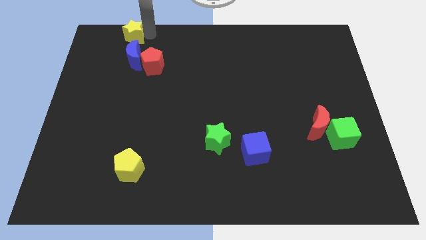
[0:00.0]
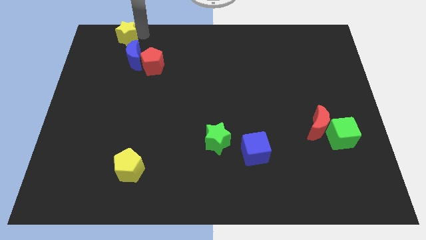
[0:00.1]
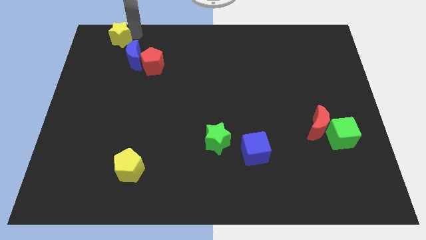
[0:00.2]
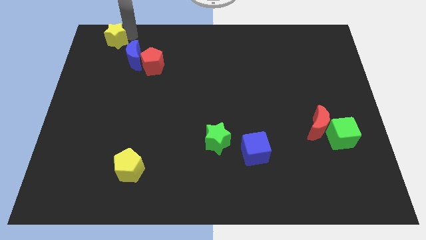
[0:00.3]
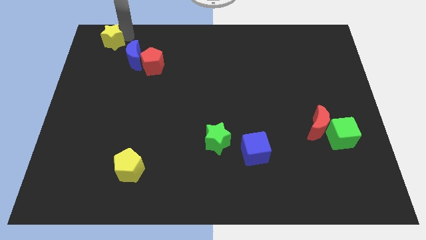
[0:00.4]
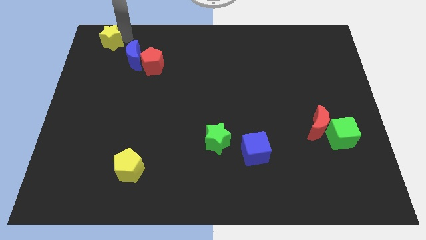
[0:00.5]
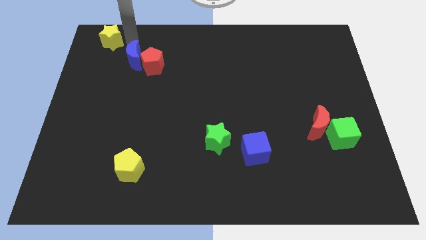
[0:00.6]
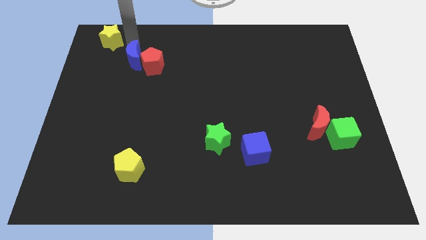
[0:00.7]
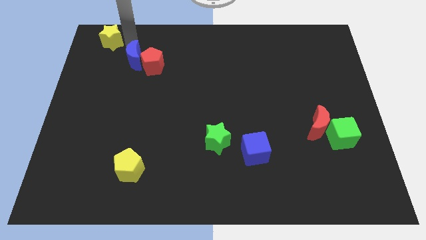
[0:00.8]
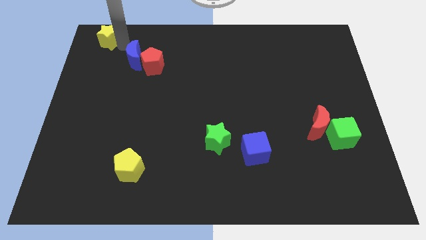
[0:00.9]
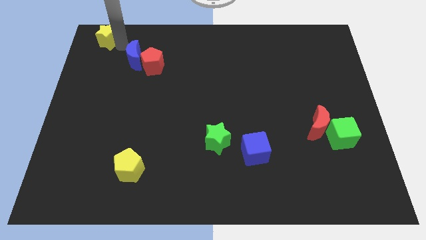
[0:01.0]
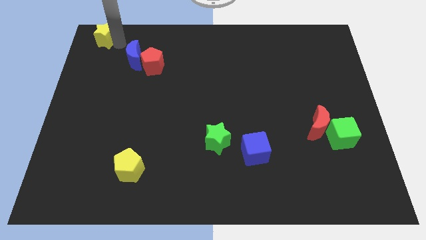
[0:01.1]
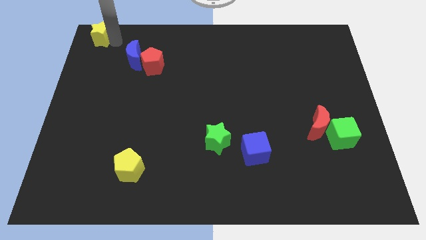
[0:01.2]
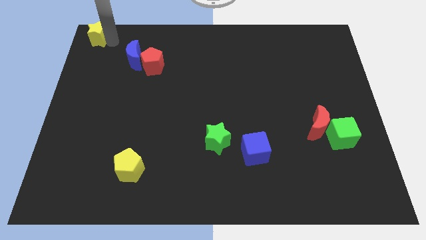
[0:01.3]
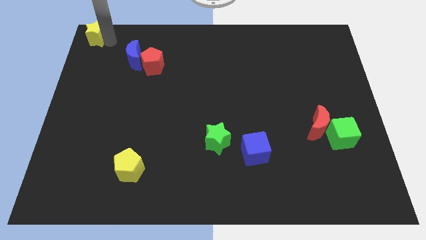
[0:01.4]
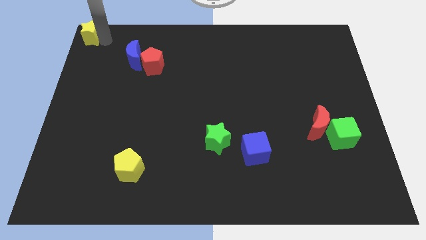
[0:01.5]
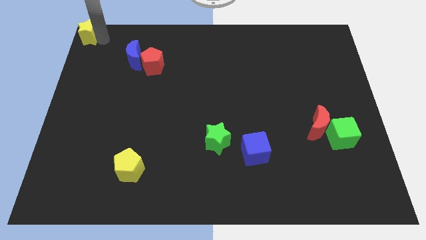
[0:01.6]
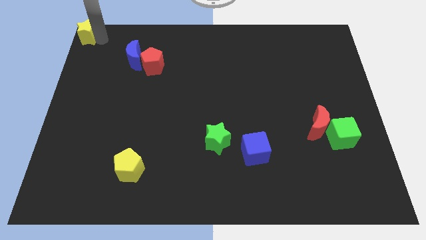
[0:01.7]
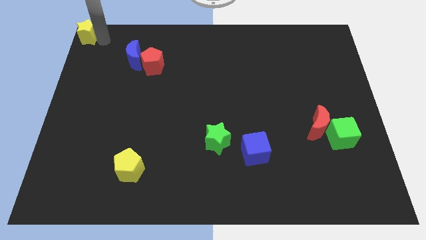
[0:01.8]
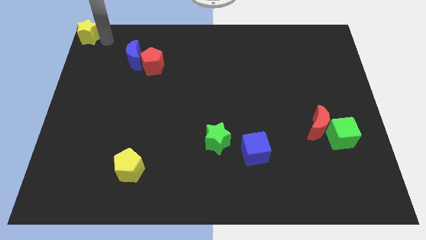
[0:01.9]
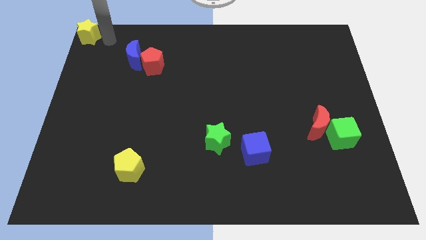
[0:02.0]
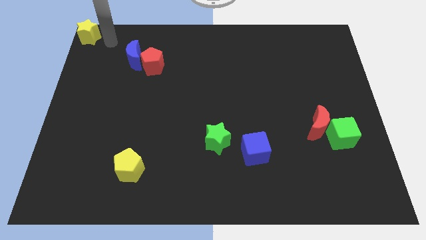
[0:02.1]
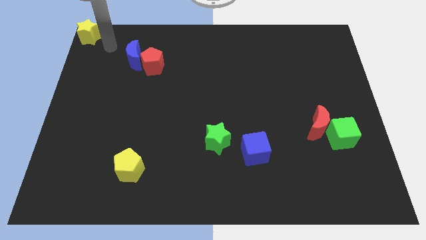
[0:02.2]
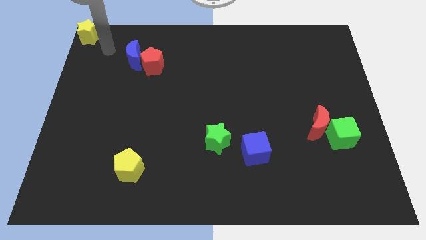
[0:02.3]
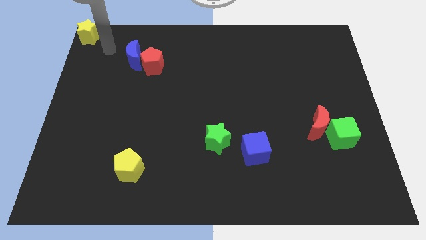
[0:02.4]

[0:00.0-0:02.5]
push the yellow star to the top left corner

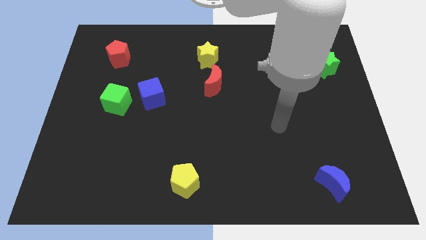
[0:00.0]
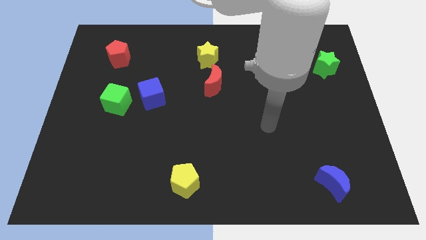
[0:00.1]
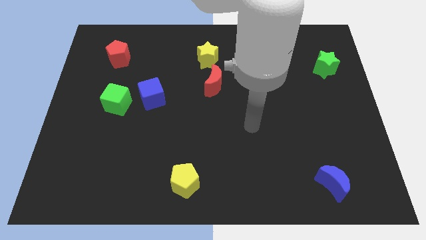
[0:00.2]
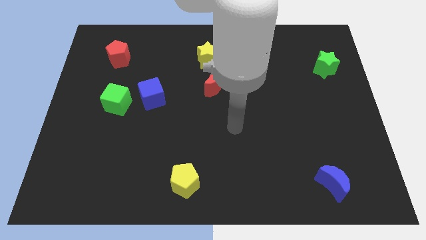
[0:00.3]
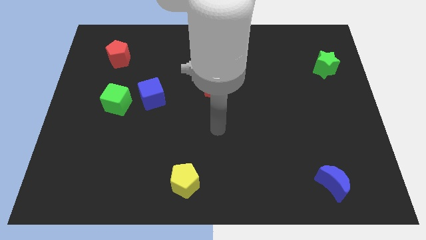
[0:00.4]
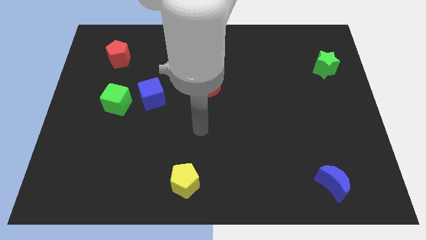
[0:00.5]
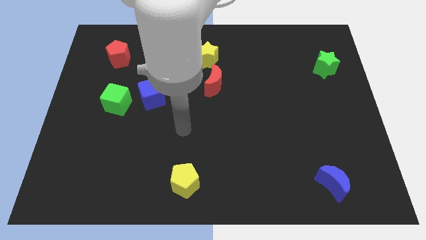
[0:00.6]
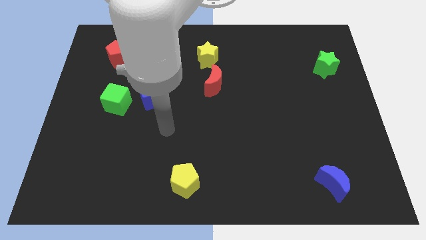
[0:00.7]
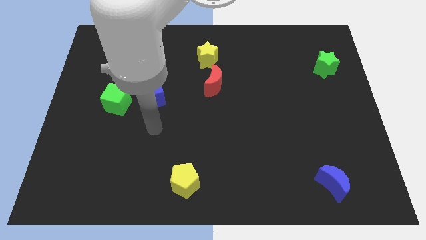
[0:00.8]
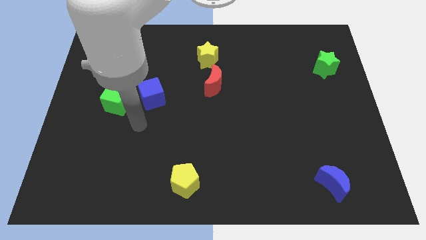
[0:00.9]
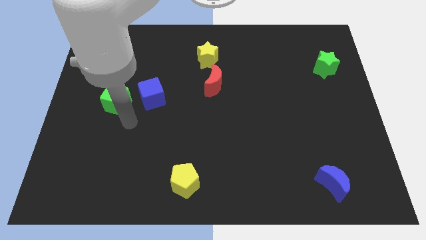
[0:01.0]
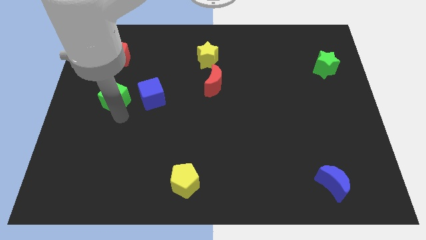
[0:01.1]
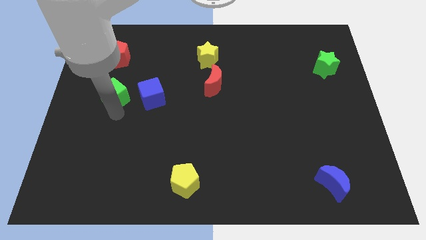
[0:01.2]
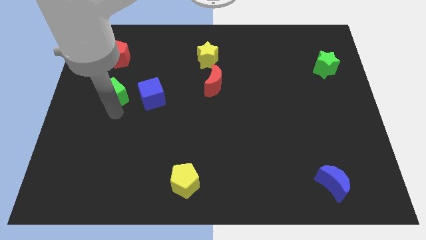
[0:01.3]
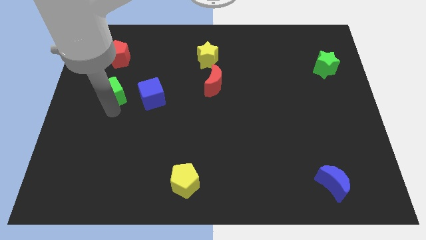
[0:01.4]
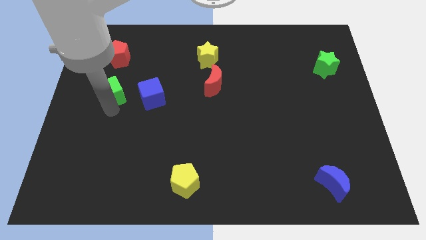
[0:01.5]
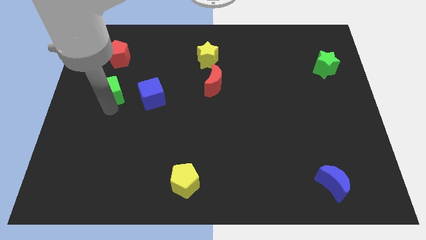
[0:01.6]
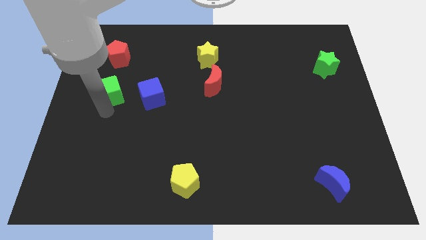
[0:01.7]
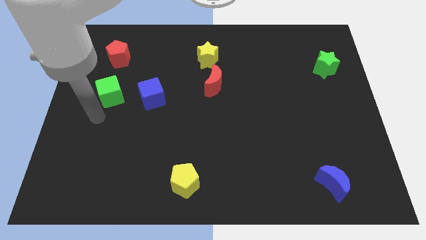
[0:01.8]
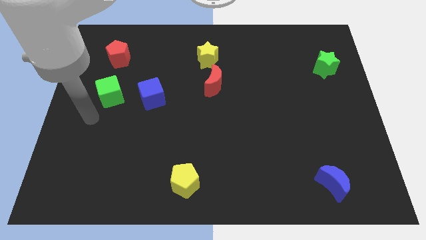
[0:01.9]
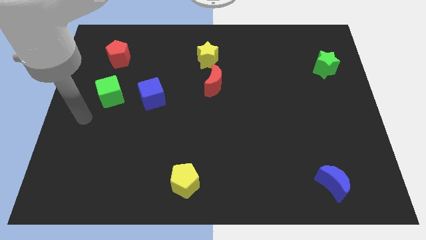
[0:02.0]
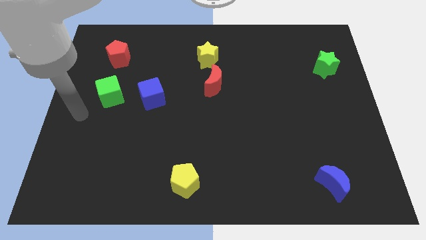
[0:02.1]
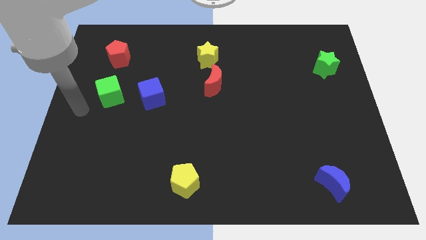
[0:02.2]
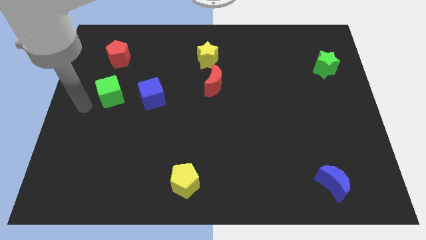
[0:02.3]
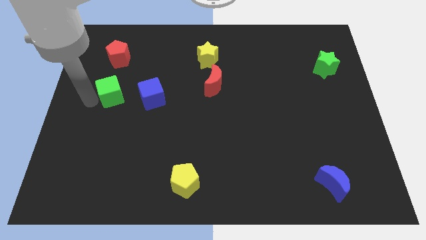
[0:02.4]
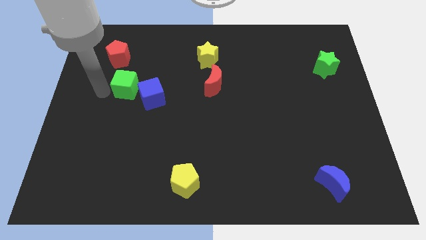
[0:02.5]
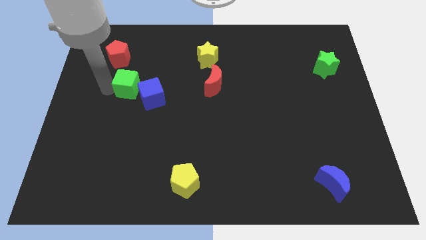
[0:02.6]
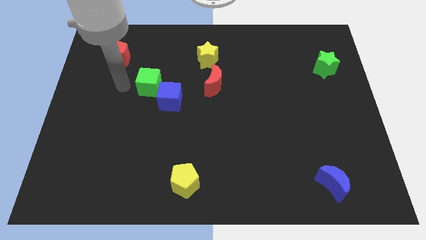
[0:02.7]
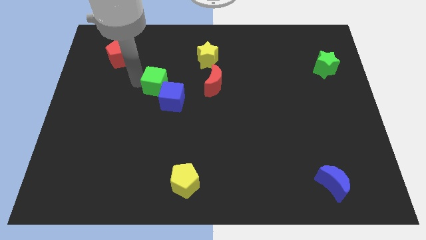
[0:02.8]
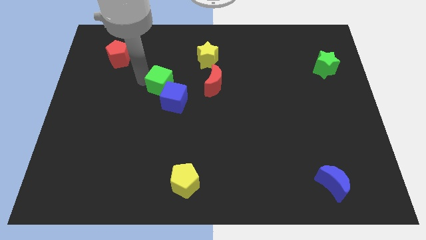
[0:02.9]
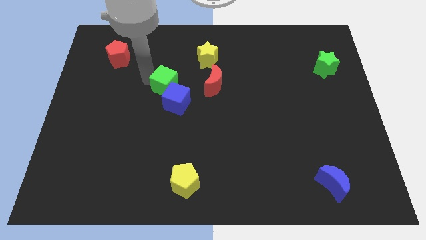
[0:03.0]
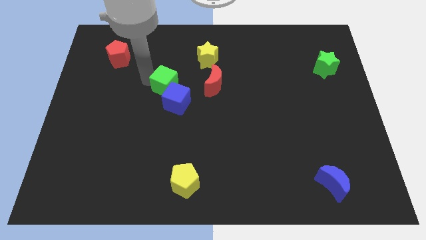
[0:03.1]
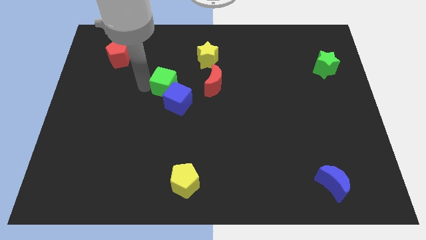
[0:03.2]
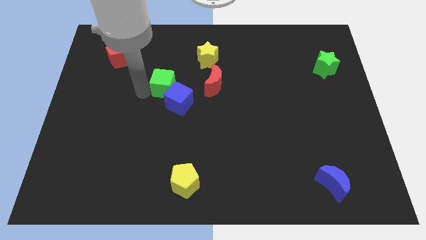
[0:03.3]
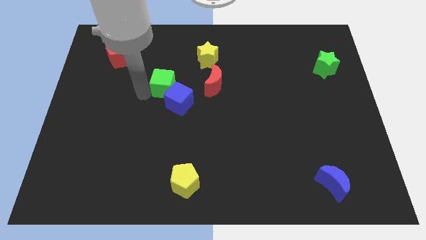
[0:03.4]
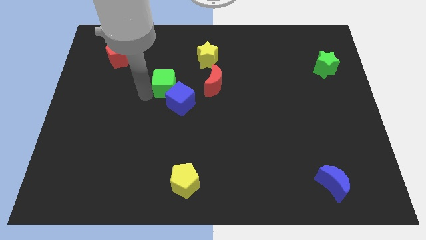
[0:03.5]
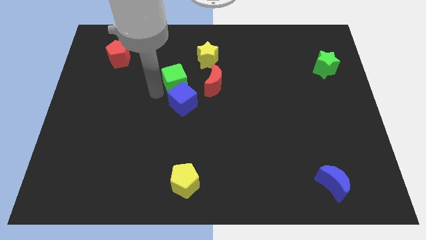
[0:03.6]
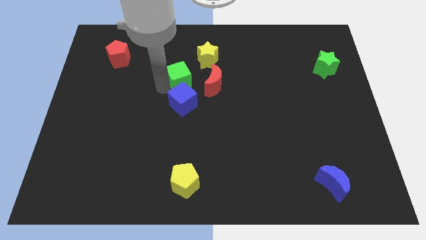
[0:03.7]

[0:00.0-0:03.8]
push green cube in to blue cube

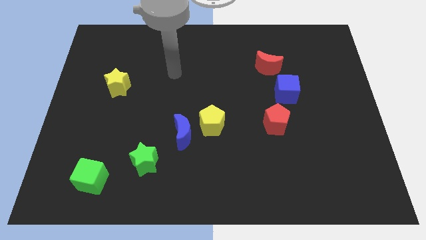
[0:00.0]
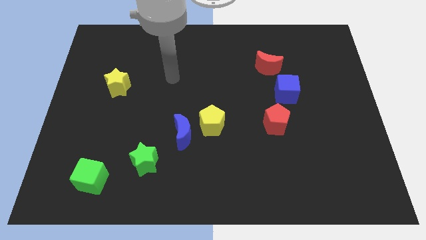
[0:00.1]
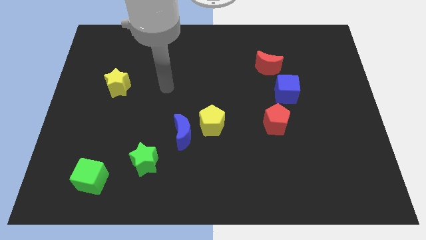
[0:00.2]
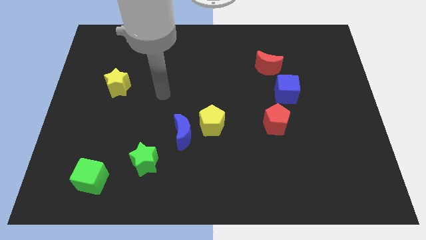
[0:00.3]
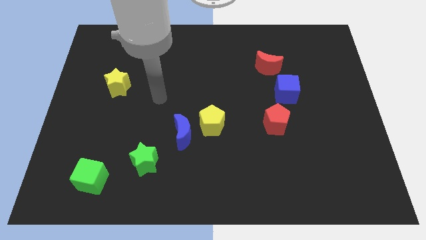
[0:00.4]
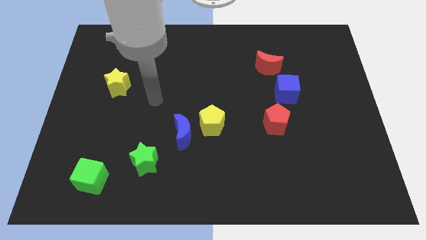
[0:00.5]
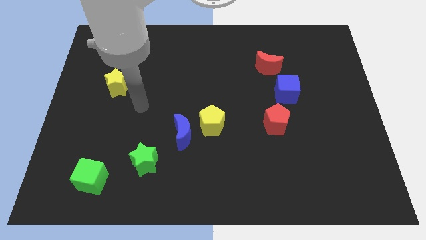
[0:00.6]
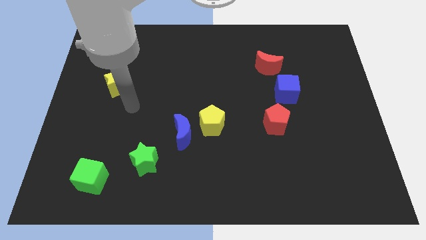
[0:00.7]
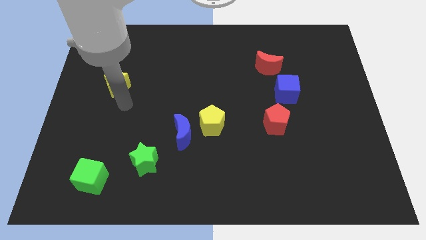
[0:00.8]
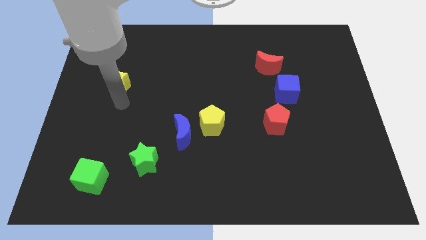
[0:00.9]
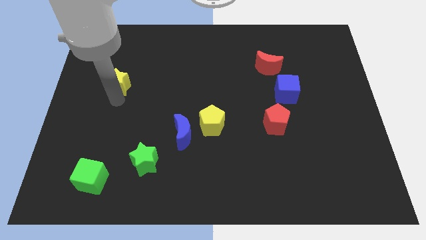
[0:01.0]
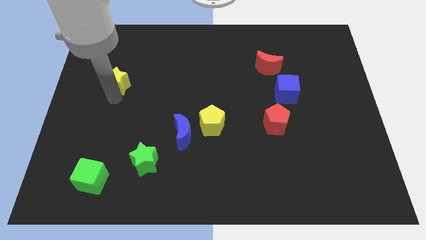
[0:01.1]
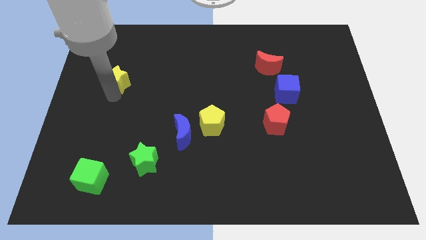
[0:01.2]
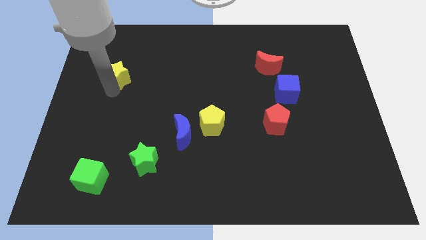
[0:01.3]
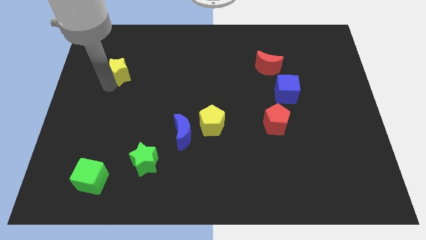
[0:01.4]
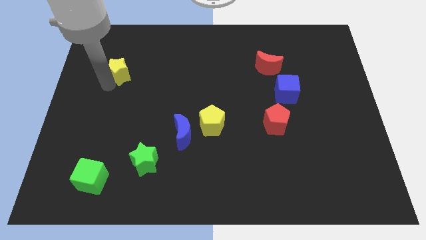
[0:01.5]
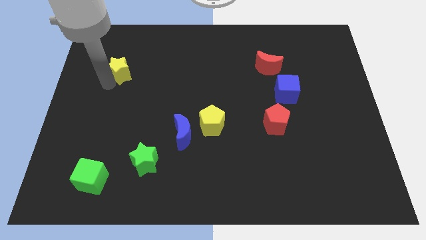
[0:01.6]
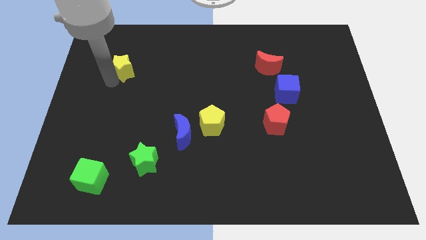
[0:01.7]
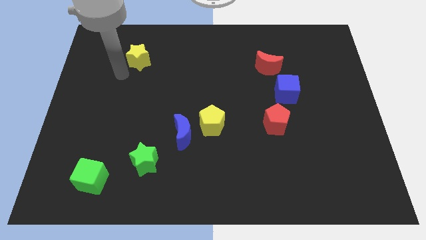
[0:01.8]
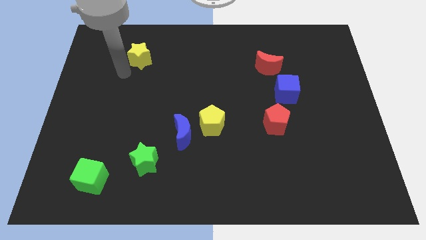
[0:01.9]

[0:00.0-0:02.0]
slide the yellow star towards the top center

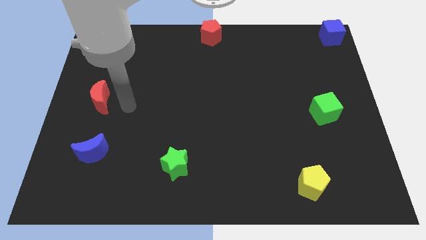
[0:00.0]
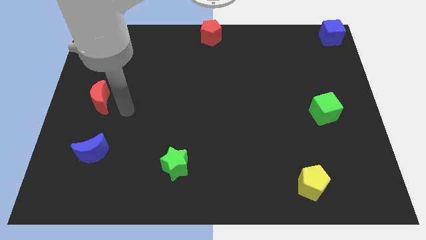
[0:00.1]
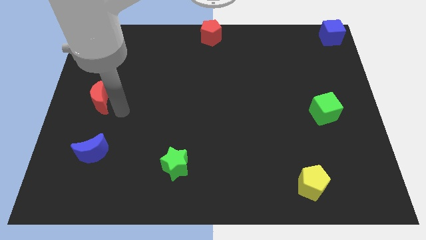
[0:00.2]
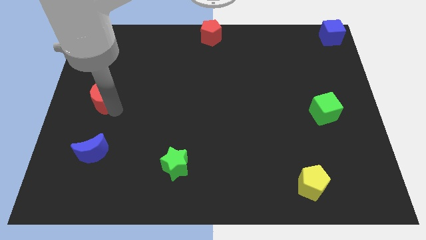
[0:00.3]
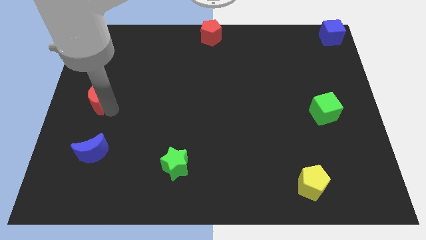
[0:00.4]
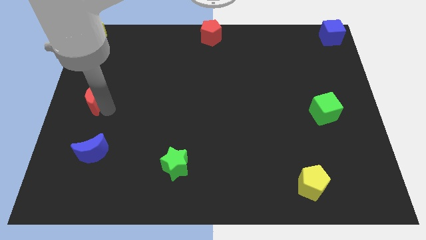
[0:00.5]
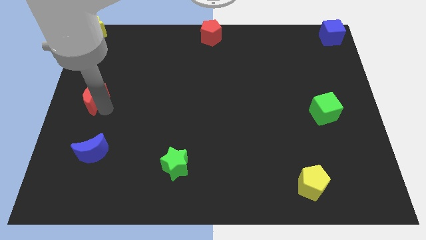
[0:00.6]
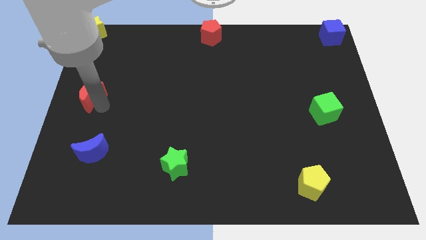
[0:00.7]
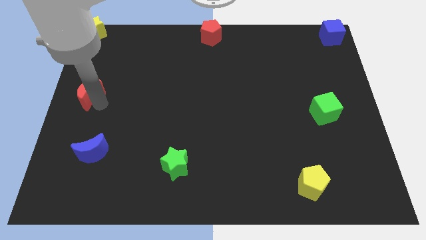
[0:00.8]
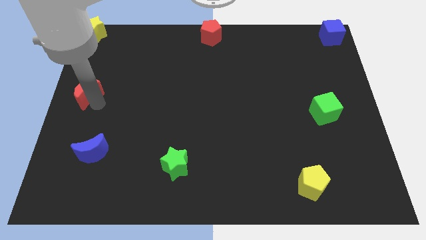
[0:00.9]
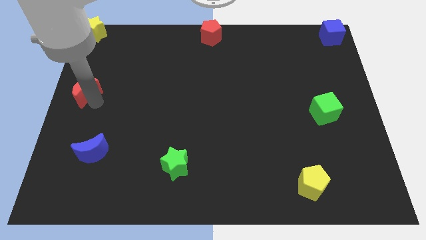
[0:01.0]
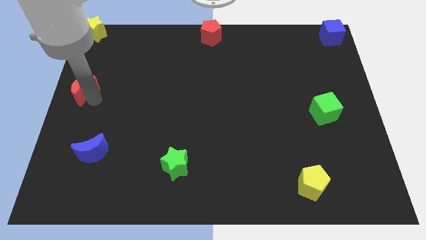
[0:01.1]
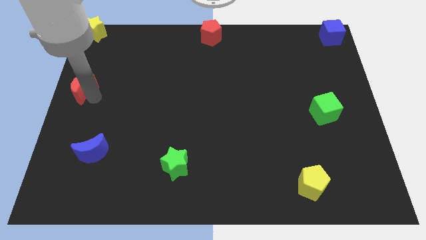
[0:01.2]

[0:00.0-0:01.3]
push the red moon to the center left of the board
